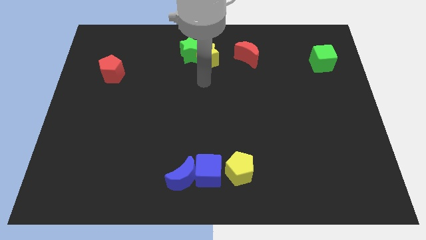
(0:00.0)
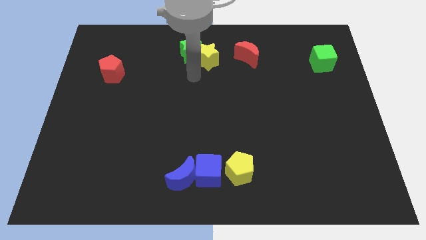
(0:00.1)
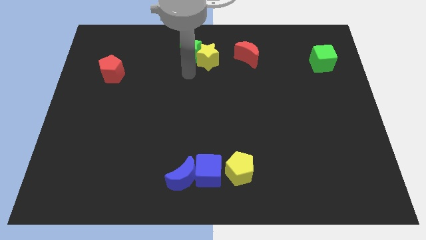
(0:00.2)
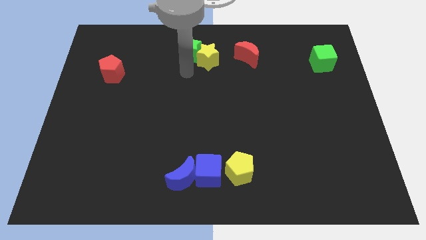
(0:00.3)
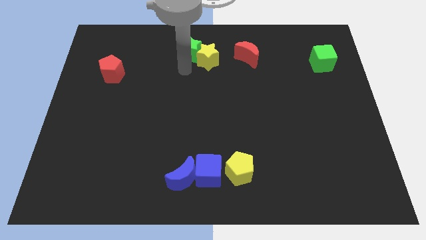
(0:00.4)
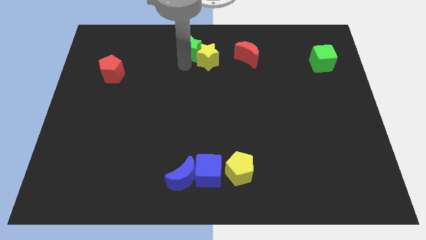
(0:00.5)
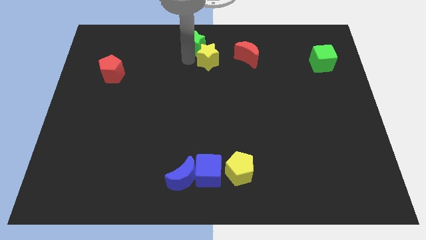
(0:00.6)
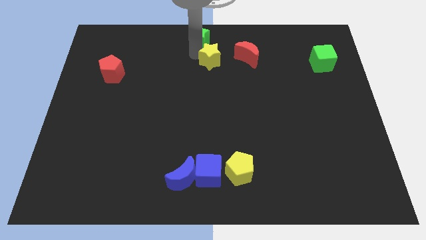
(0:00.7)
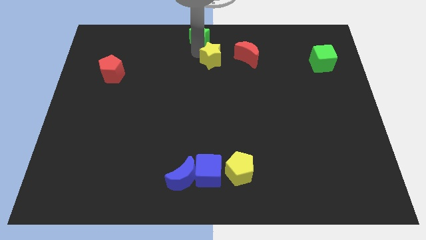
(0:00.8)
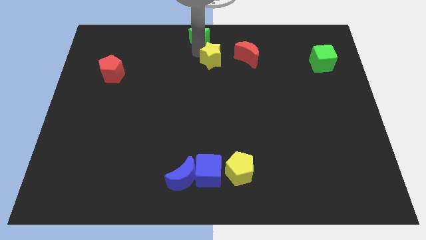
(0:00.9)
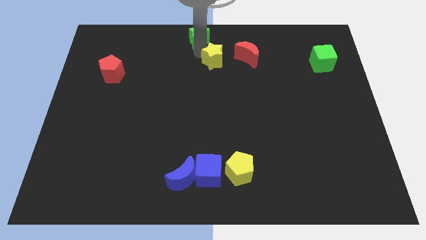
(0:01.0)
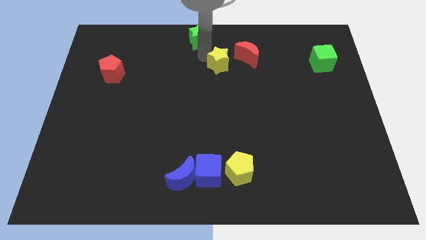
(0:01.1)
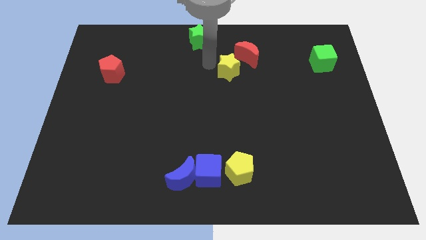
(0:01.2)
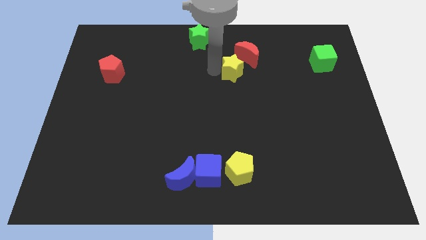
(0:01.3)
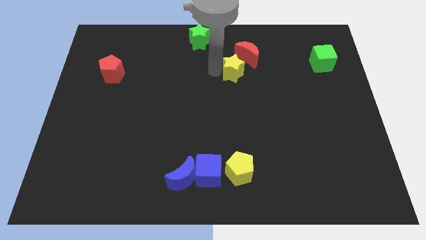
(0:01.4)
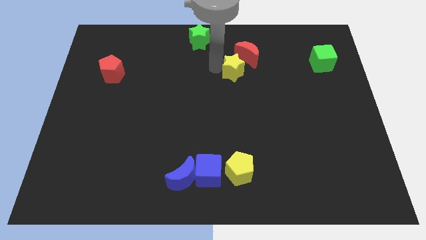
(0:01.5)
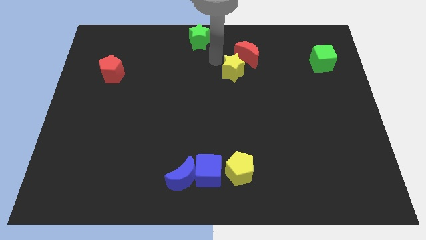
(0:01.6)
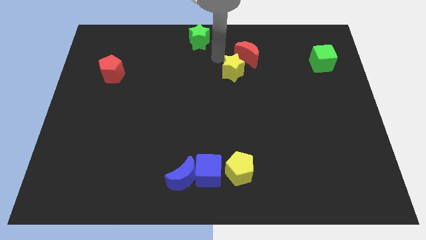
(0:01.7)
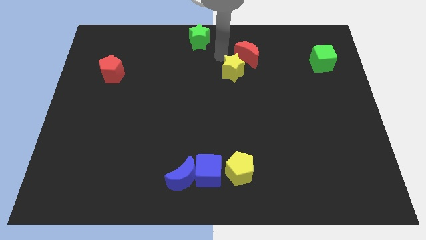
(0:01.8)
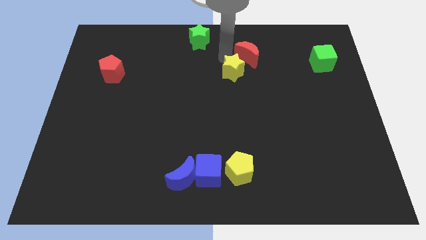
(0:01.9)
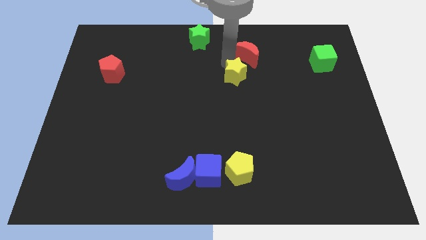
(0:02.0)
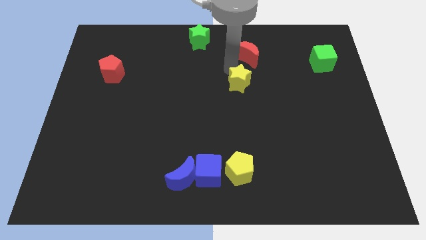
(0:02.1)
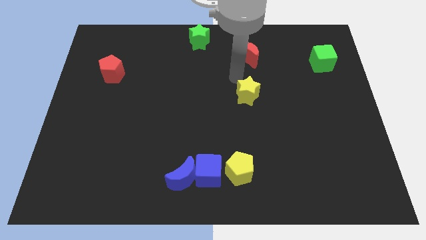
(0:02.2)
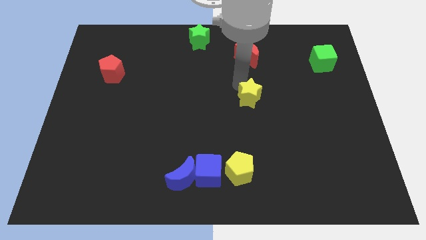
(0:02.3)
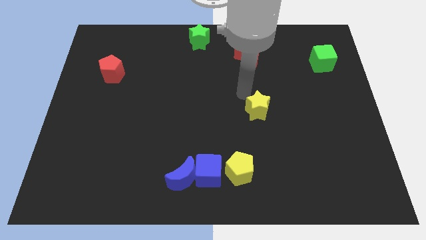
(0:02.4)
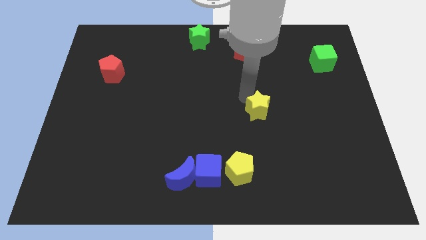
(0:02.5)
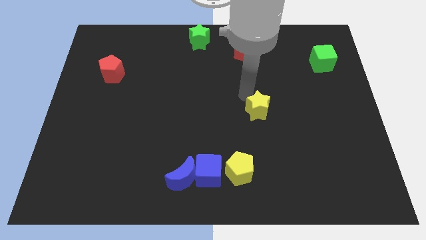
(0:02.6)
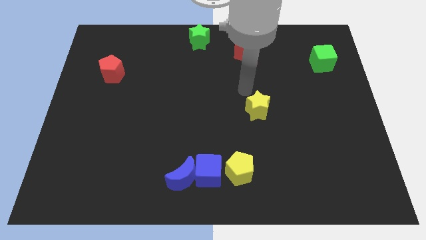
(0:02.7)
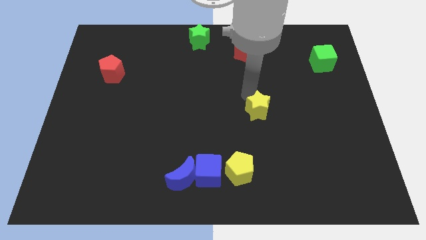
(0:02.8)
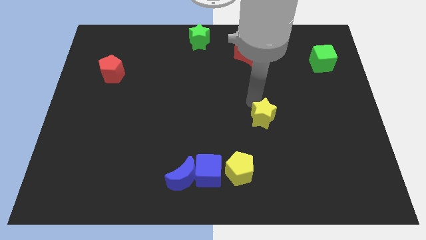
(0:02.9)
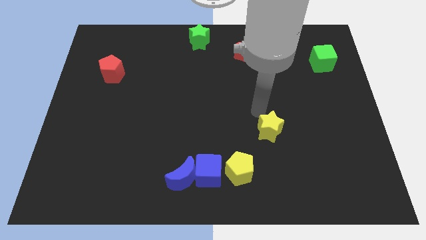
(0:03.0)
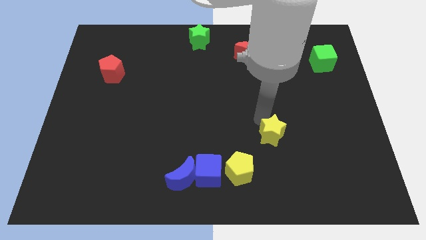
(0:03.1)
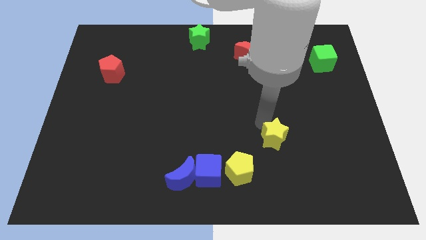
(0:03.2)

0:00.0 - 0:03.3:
move the yellow star diagonally to the top right of the yellow pentagon

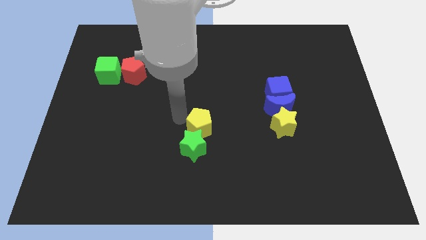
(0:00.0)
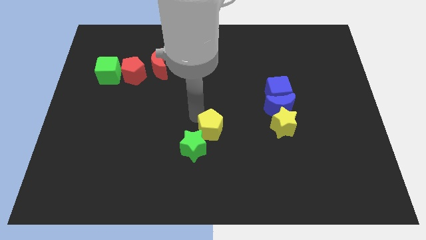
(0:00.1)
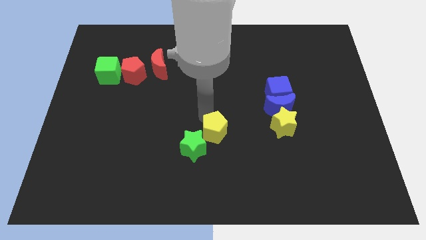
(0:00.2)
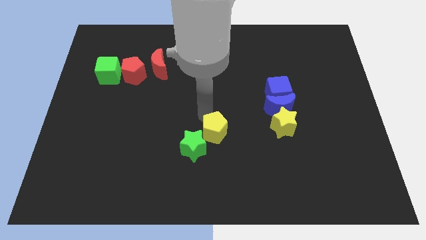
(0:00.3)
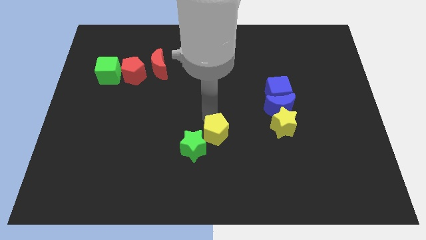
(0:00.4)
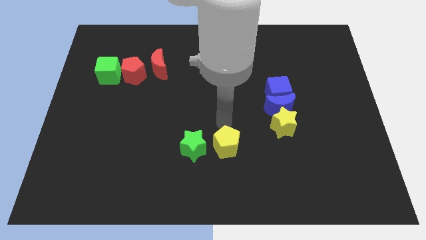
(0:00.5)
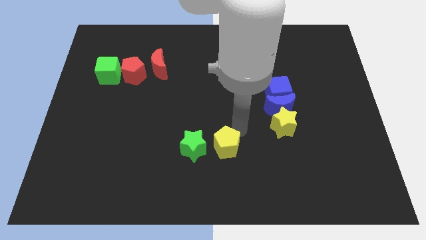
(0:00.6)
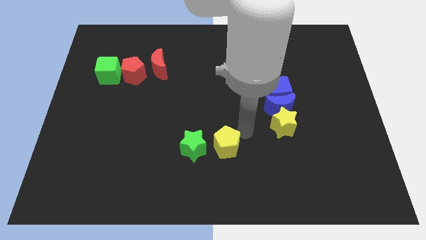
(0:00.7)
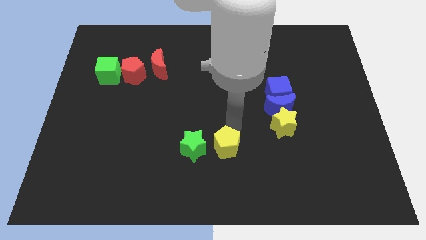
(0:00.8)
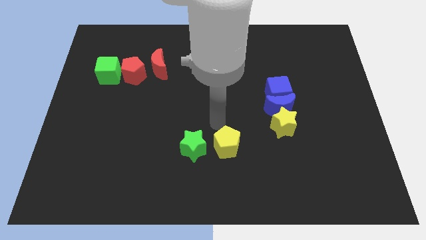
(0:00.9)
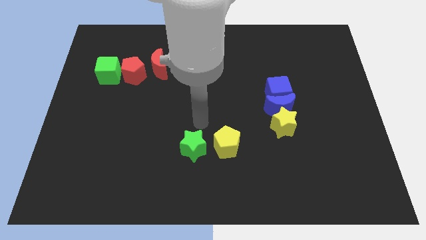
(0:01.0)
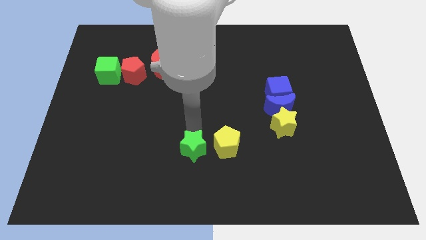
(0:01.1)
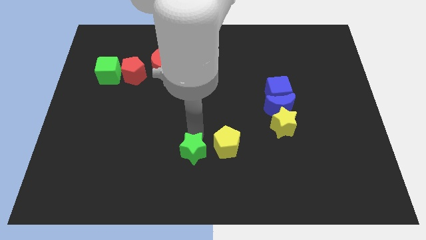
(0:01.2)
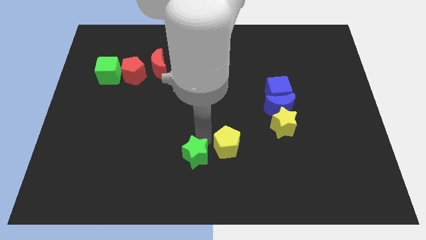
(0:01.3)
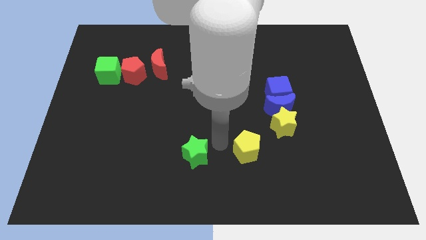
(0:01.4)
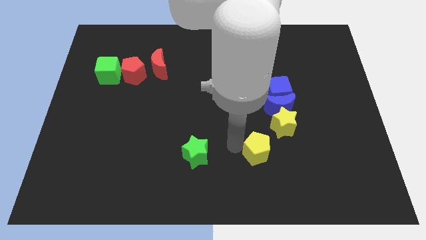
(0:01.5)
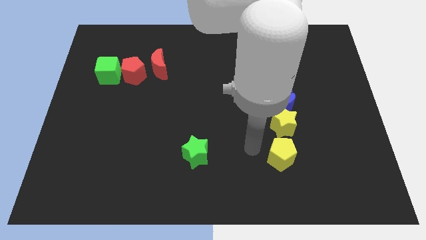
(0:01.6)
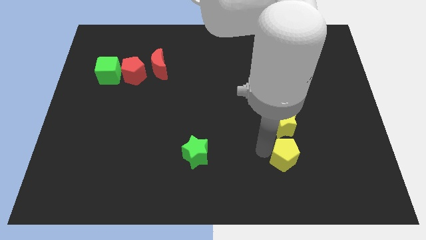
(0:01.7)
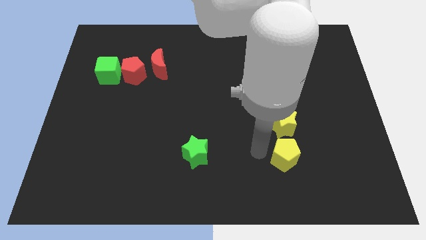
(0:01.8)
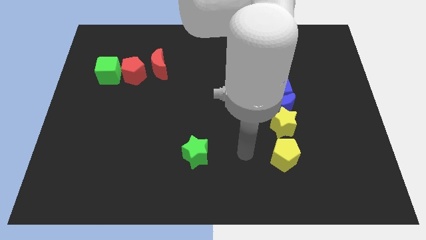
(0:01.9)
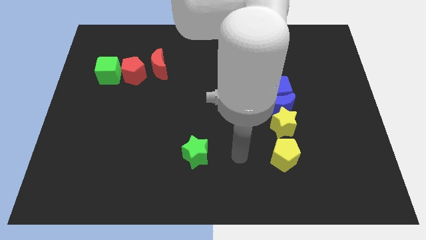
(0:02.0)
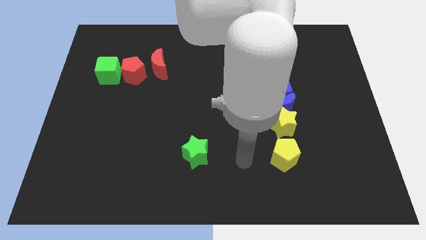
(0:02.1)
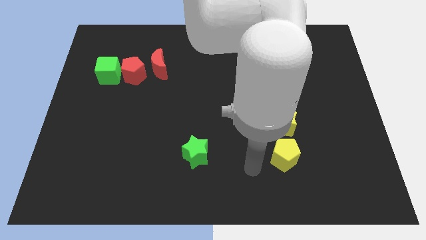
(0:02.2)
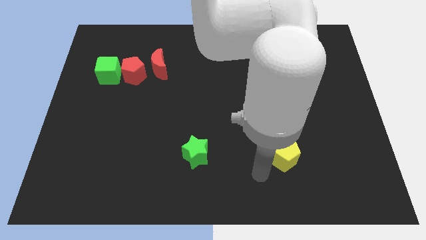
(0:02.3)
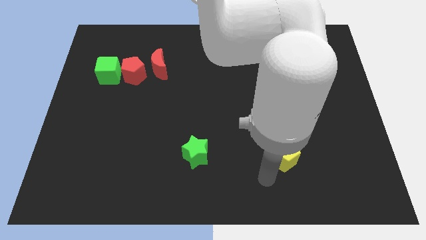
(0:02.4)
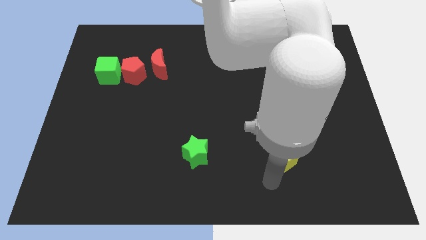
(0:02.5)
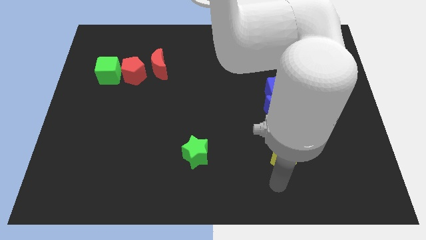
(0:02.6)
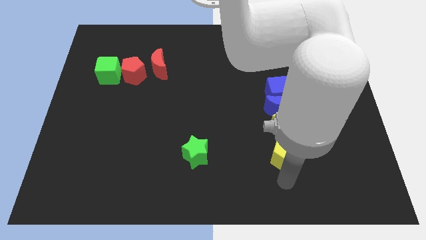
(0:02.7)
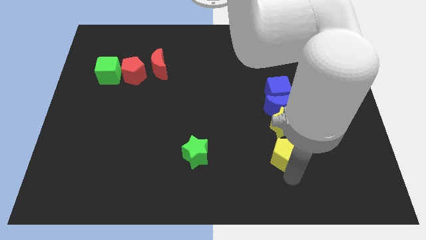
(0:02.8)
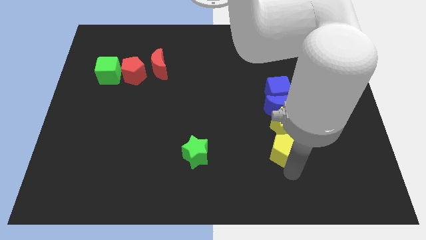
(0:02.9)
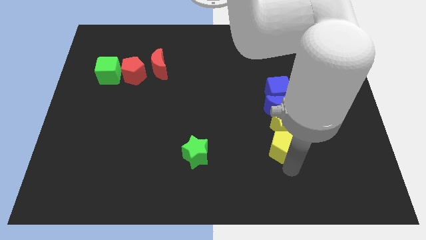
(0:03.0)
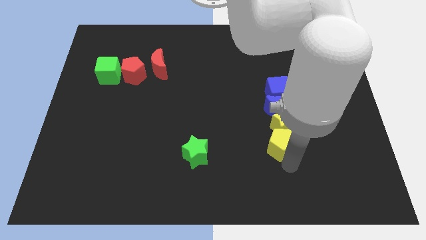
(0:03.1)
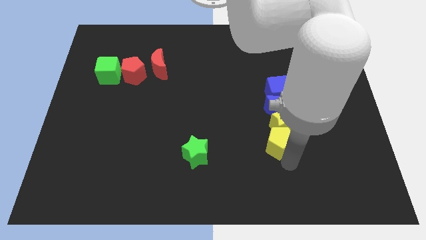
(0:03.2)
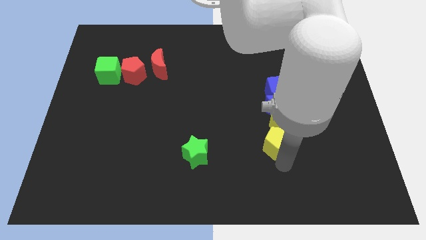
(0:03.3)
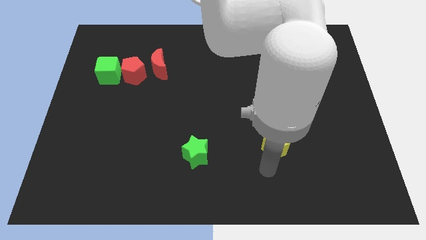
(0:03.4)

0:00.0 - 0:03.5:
drag the yellow pentagon into the bottom side of the yellow star

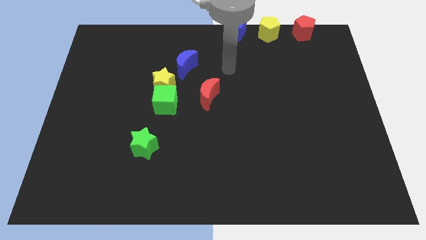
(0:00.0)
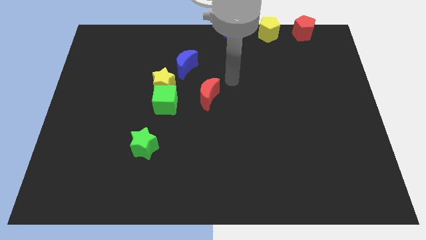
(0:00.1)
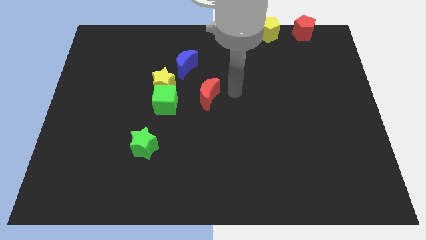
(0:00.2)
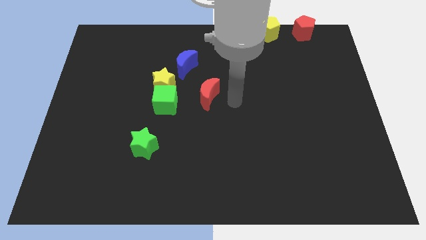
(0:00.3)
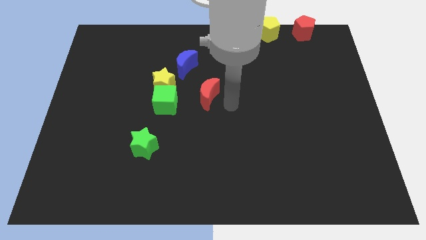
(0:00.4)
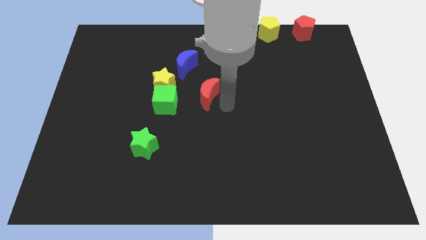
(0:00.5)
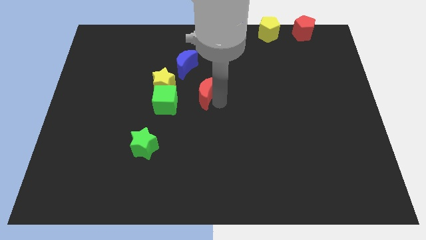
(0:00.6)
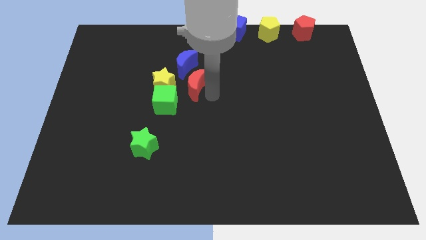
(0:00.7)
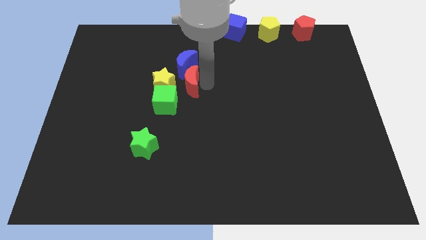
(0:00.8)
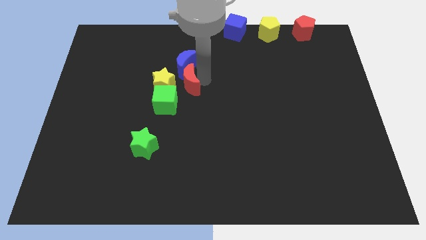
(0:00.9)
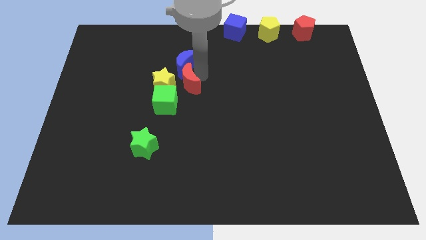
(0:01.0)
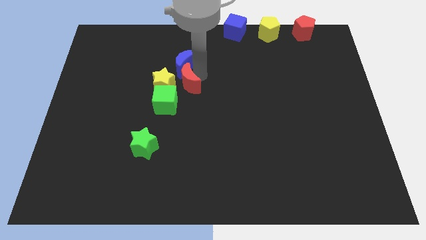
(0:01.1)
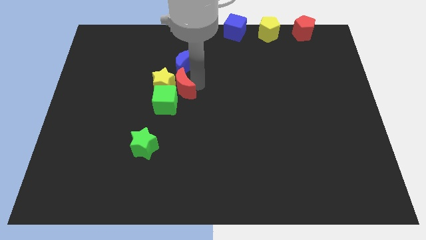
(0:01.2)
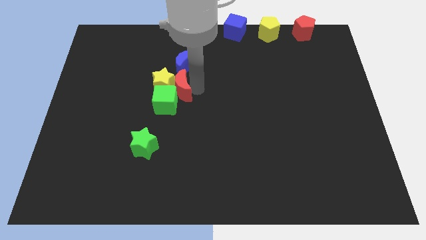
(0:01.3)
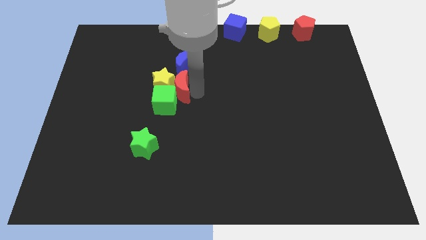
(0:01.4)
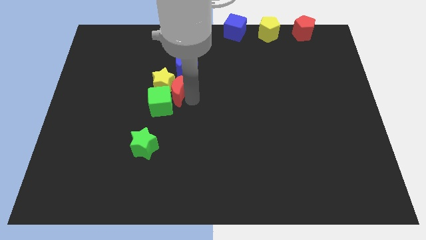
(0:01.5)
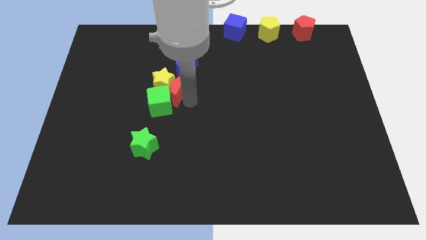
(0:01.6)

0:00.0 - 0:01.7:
move the red moon into the yellow star

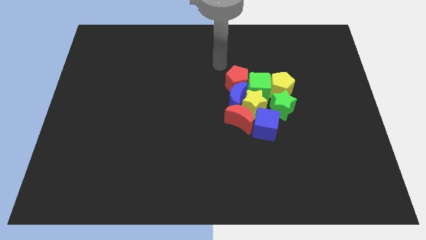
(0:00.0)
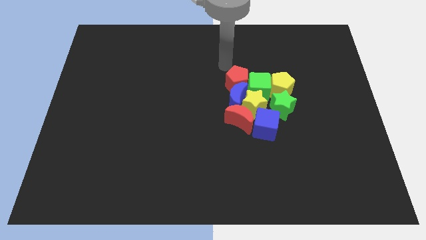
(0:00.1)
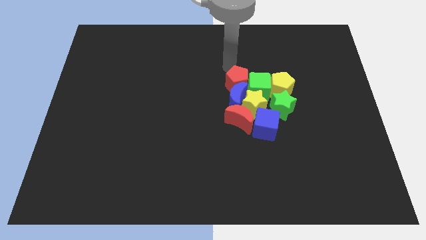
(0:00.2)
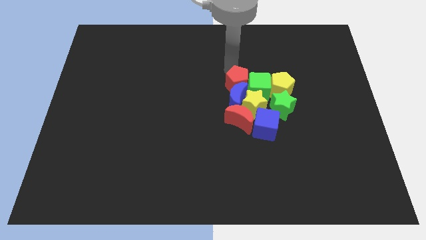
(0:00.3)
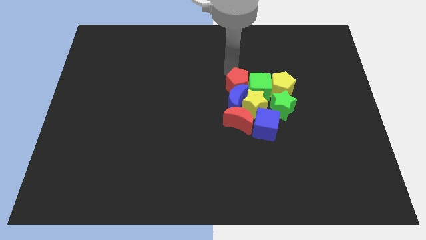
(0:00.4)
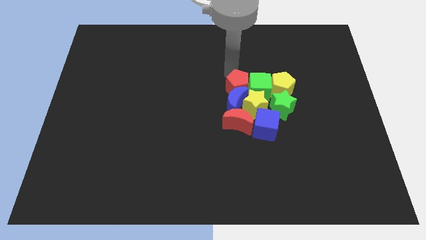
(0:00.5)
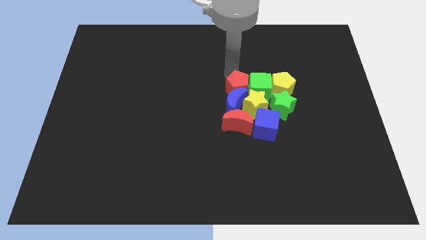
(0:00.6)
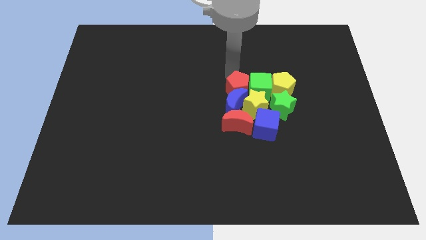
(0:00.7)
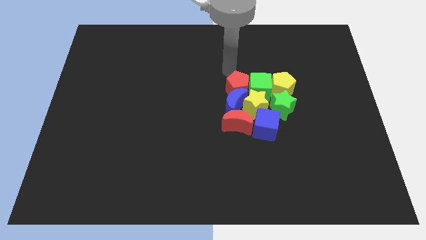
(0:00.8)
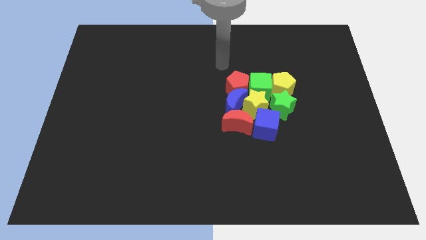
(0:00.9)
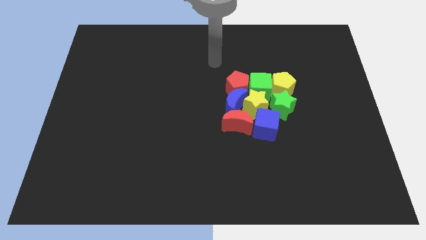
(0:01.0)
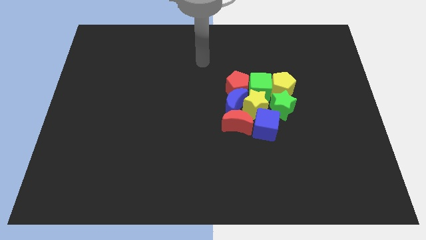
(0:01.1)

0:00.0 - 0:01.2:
move red pentagon slightly down
